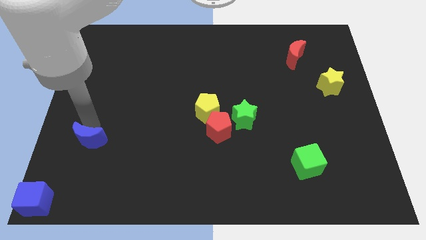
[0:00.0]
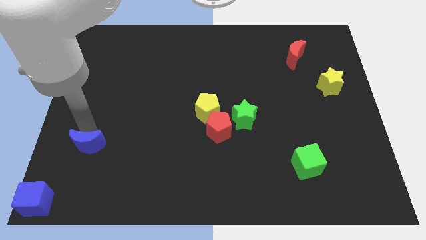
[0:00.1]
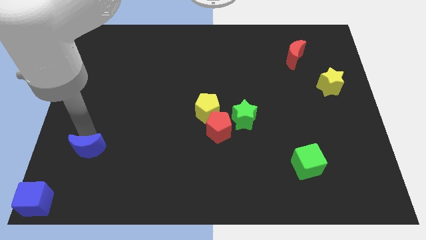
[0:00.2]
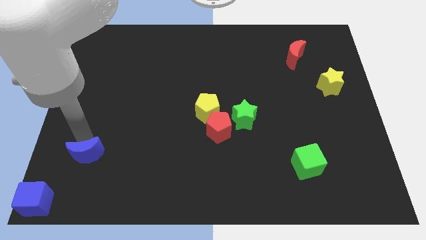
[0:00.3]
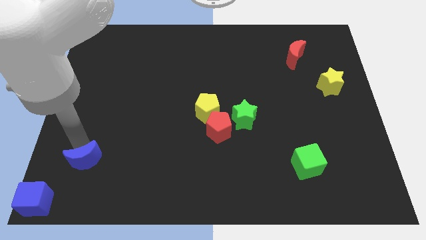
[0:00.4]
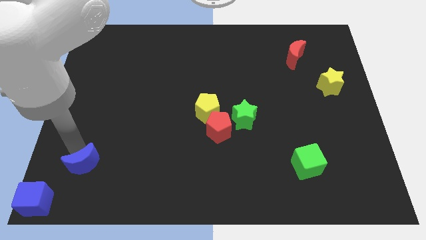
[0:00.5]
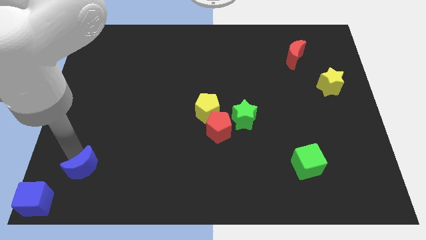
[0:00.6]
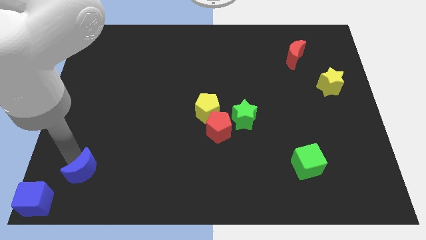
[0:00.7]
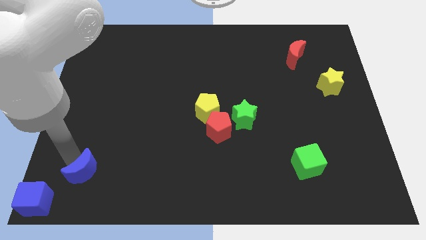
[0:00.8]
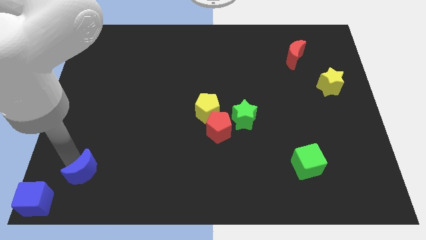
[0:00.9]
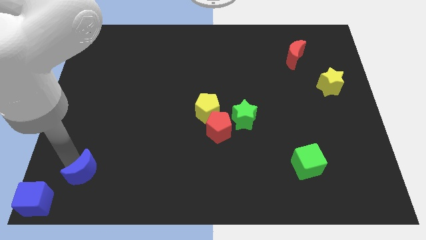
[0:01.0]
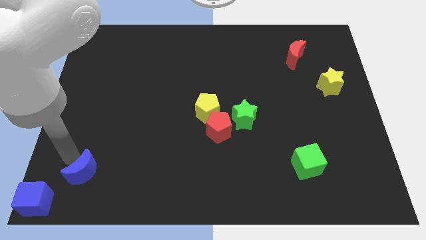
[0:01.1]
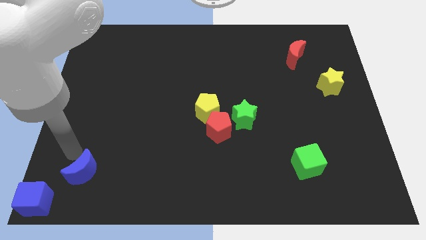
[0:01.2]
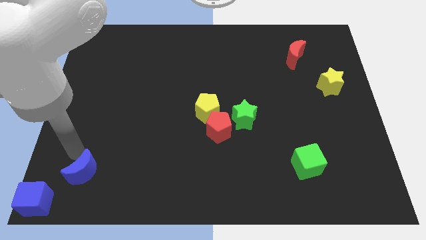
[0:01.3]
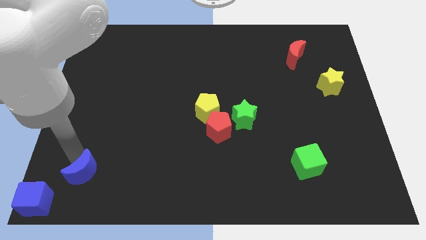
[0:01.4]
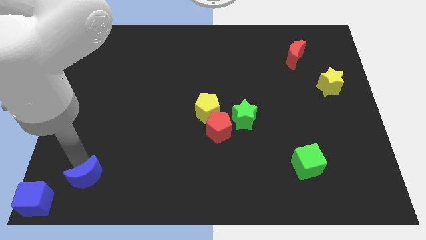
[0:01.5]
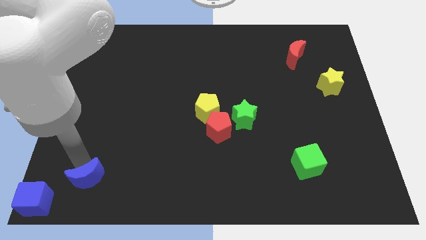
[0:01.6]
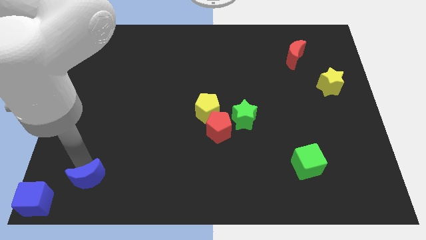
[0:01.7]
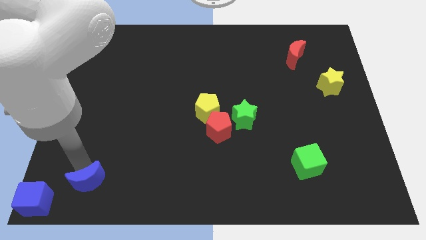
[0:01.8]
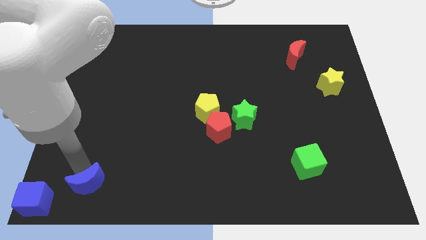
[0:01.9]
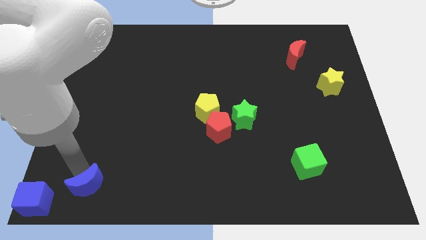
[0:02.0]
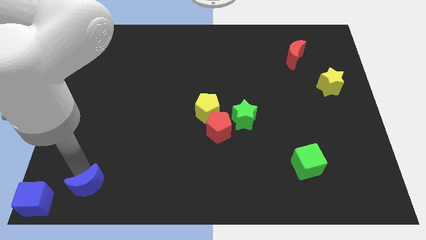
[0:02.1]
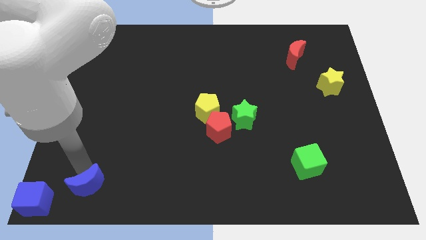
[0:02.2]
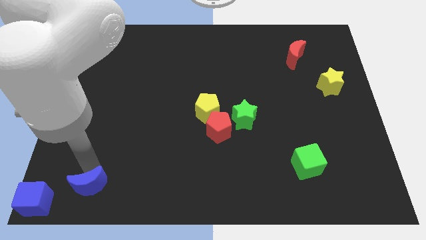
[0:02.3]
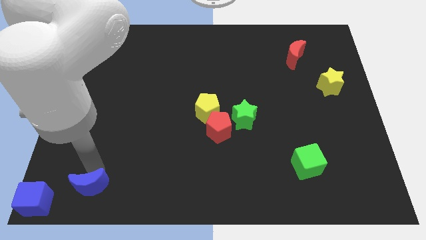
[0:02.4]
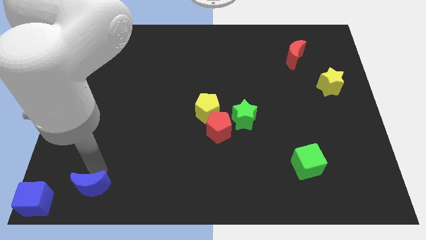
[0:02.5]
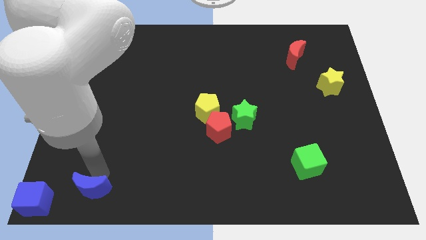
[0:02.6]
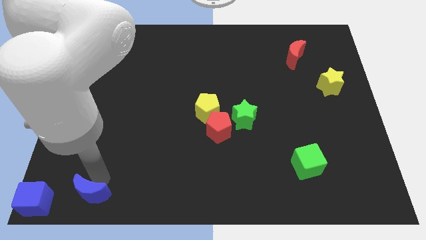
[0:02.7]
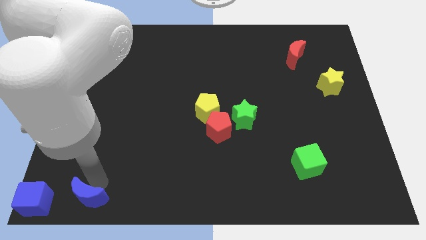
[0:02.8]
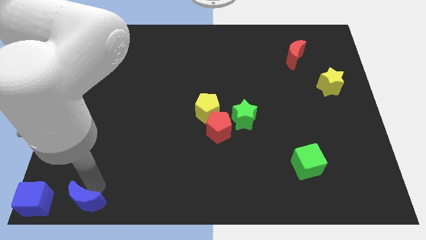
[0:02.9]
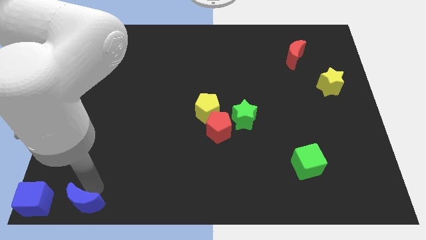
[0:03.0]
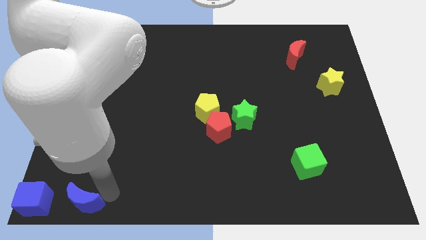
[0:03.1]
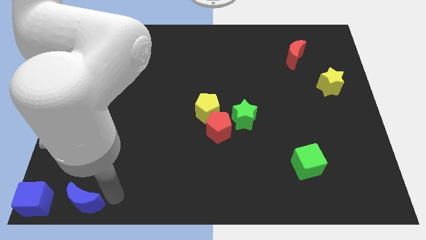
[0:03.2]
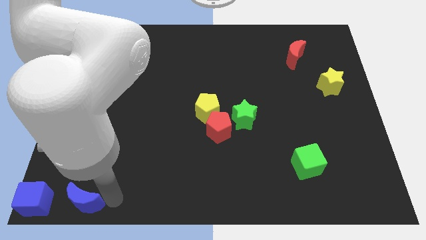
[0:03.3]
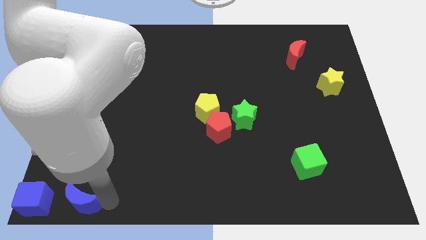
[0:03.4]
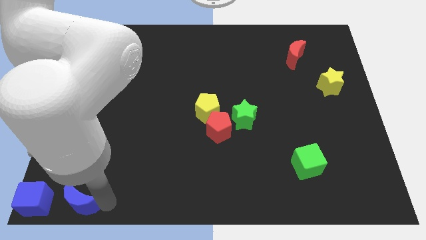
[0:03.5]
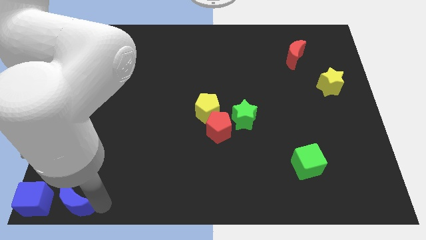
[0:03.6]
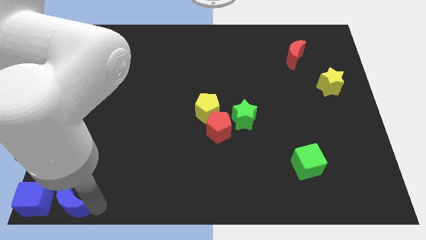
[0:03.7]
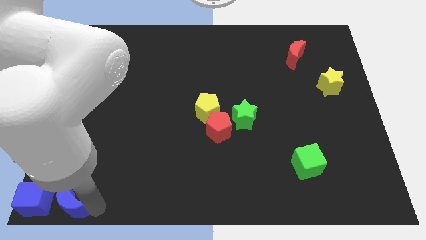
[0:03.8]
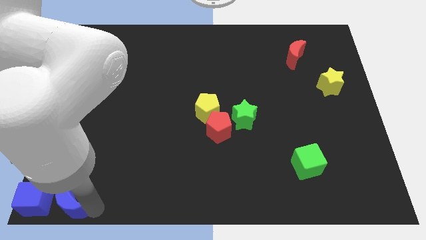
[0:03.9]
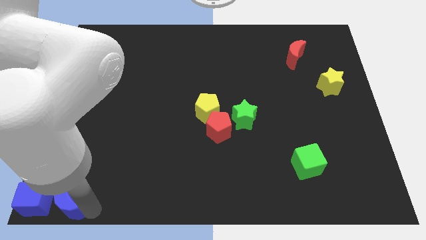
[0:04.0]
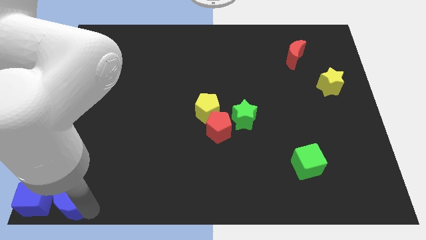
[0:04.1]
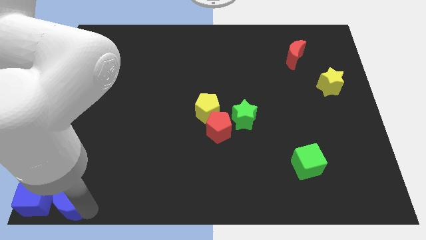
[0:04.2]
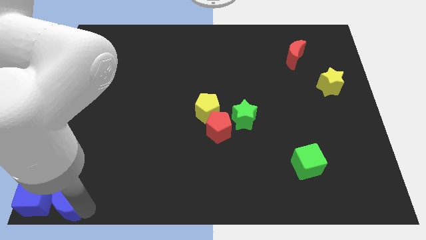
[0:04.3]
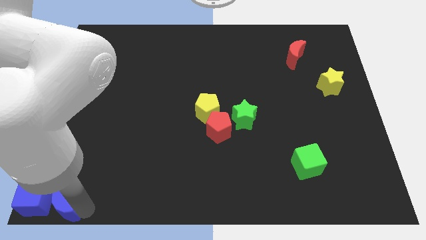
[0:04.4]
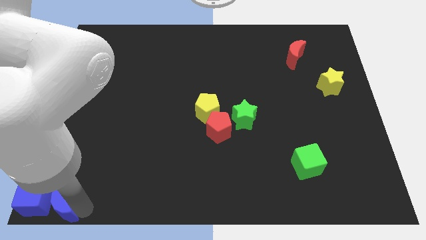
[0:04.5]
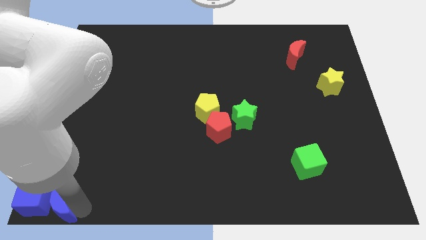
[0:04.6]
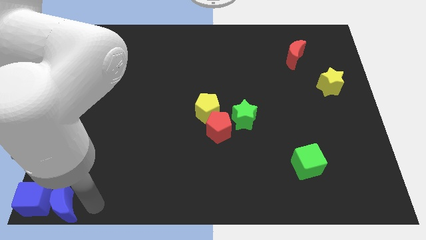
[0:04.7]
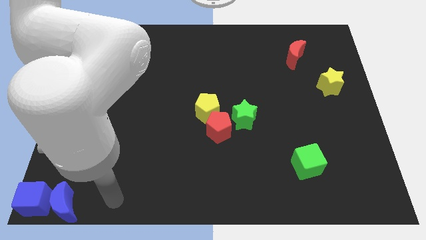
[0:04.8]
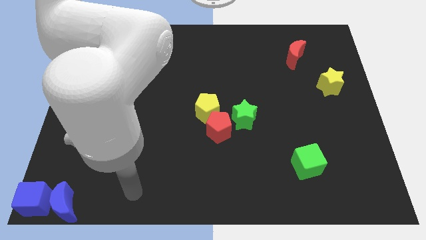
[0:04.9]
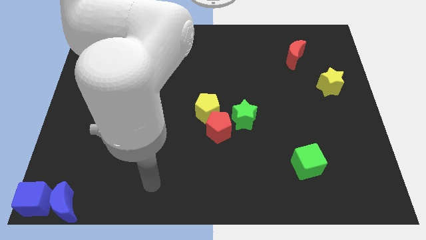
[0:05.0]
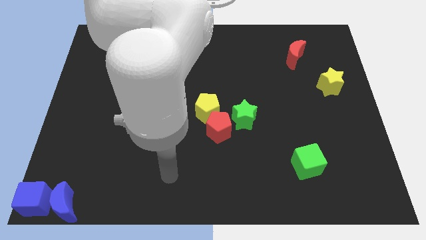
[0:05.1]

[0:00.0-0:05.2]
move the blue crescent right to the blue cube

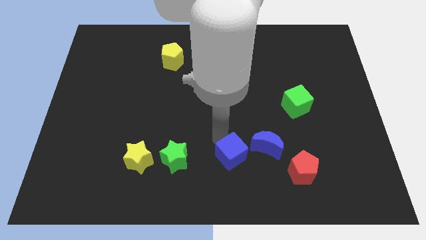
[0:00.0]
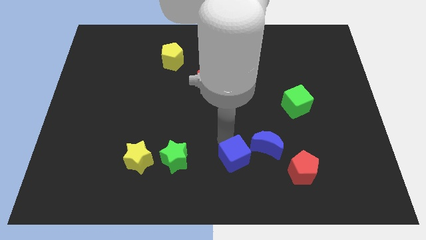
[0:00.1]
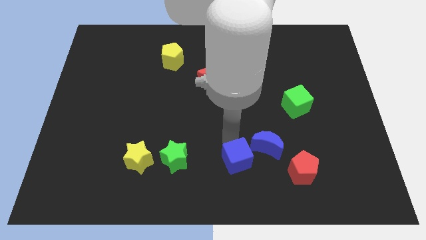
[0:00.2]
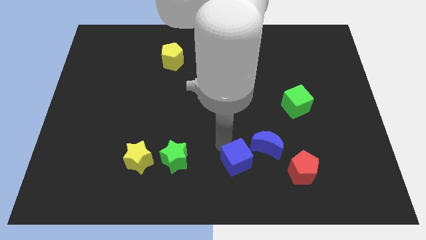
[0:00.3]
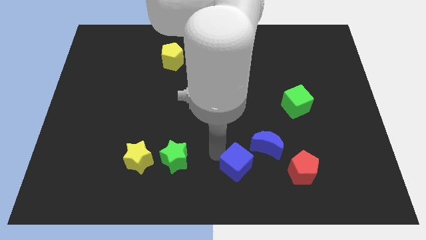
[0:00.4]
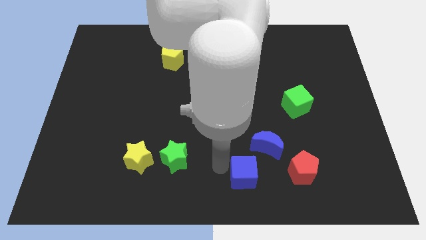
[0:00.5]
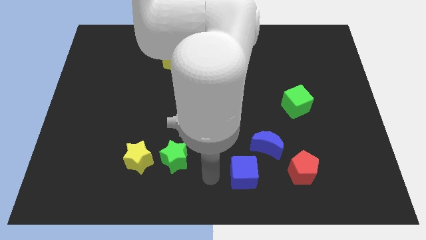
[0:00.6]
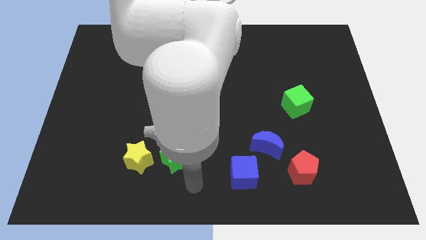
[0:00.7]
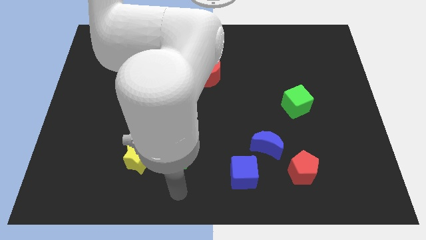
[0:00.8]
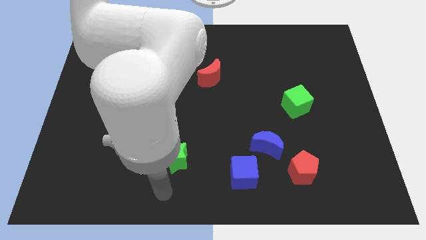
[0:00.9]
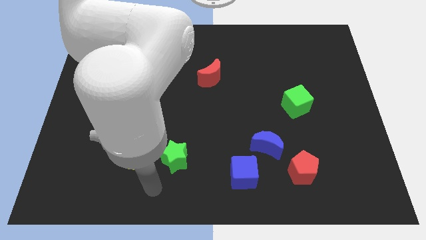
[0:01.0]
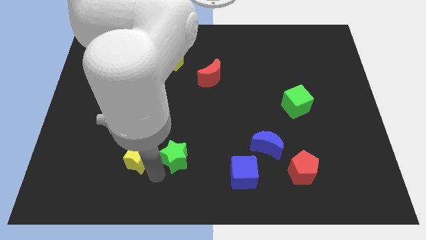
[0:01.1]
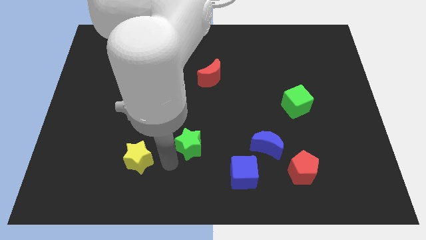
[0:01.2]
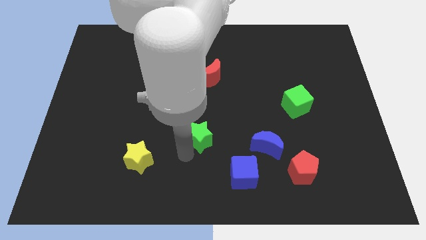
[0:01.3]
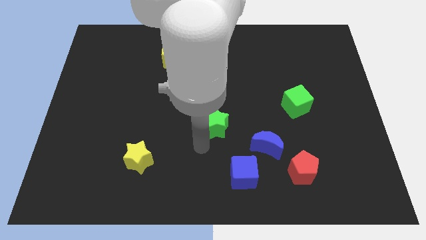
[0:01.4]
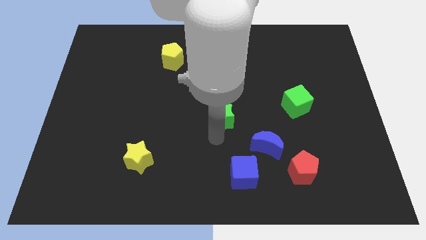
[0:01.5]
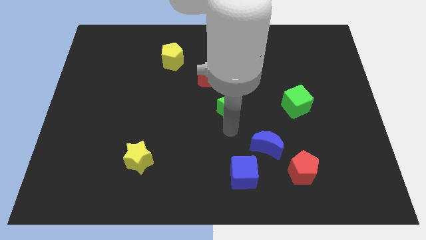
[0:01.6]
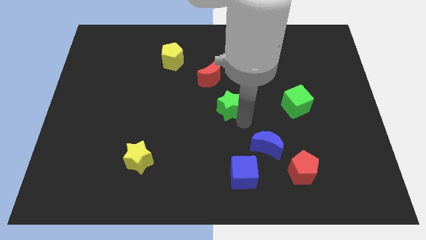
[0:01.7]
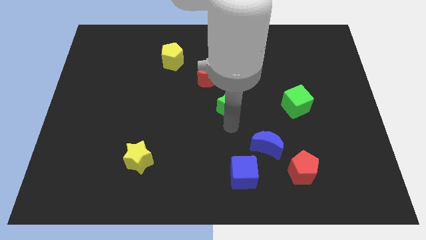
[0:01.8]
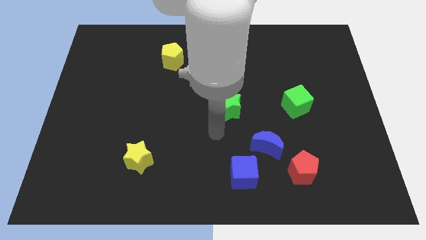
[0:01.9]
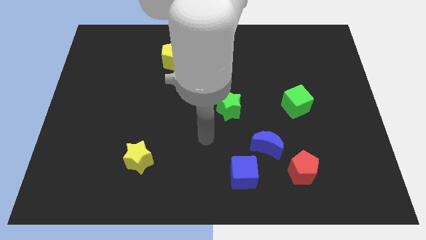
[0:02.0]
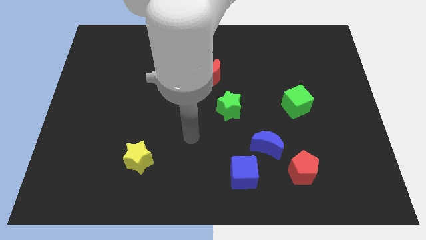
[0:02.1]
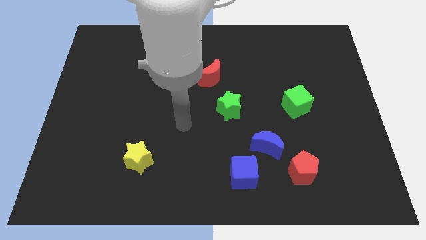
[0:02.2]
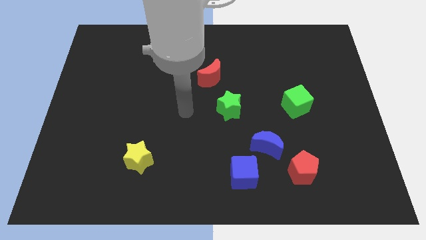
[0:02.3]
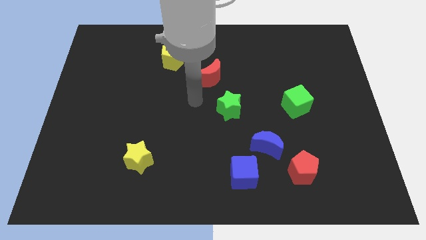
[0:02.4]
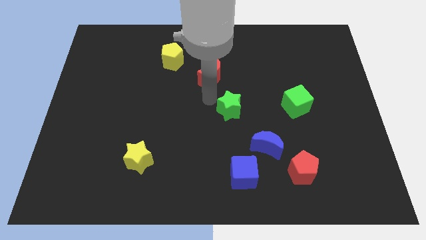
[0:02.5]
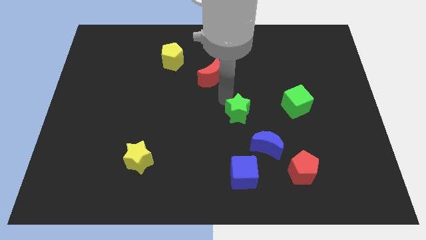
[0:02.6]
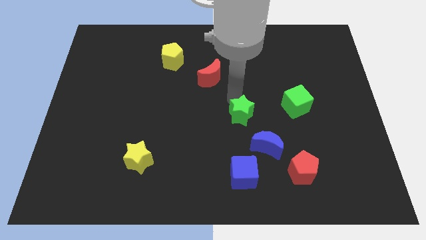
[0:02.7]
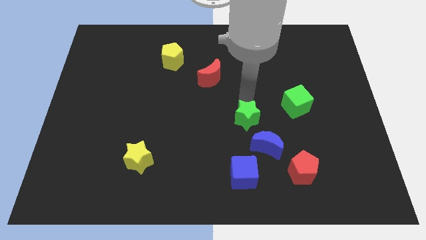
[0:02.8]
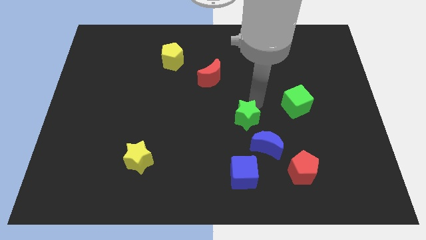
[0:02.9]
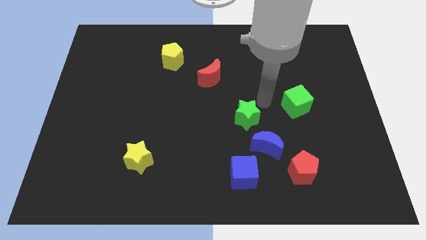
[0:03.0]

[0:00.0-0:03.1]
put the green star vertically above the blue cube

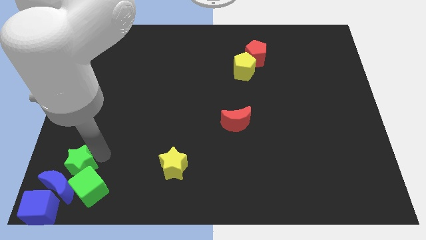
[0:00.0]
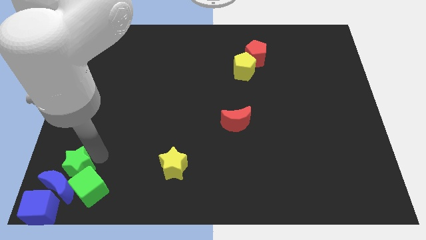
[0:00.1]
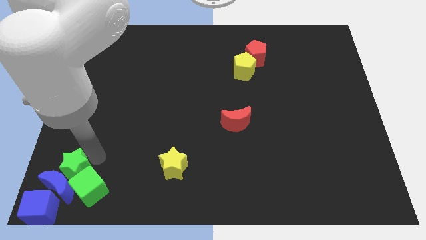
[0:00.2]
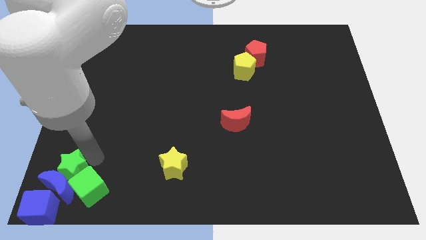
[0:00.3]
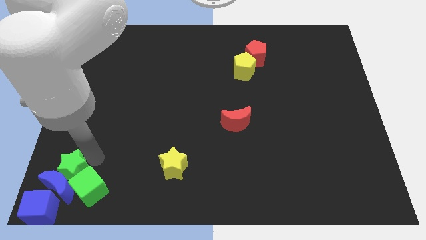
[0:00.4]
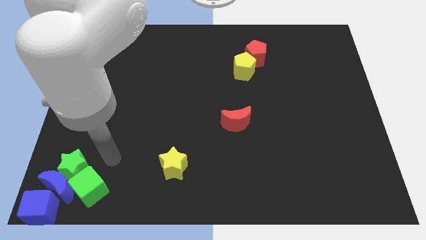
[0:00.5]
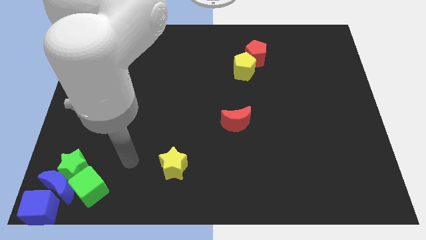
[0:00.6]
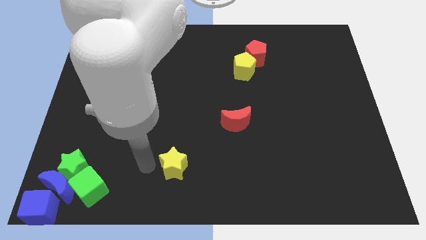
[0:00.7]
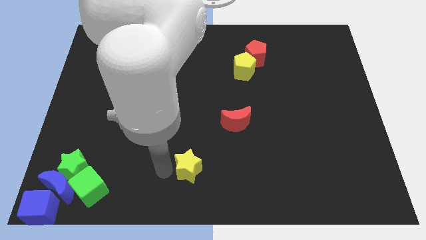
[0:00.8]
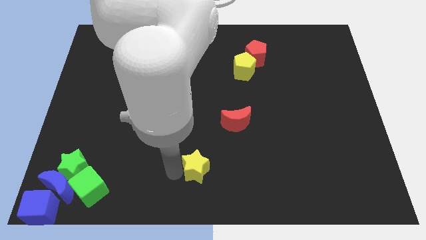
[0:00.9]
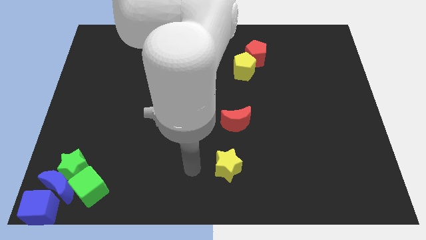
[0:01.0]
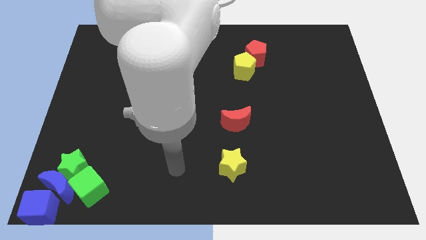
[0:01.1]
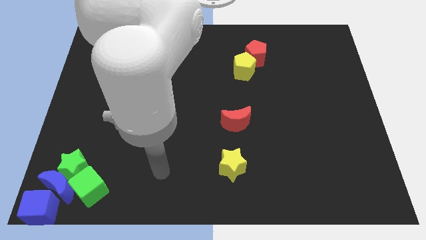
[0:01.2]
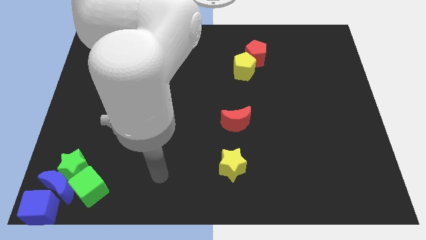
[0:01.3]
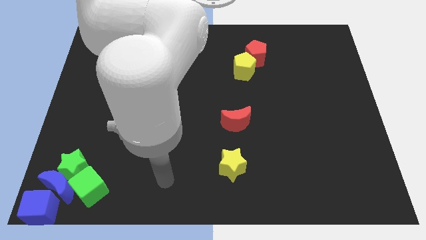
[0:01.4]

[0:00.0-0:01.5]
push the yellow star vertically below the red crescent
